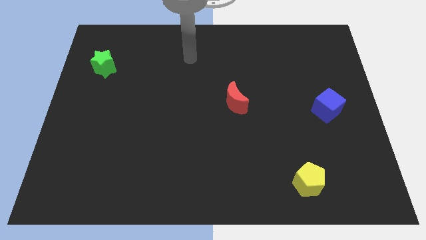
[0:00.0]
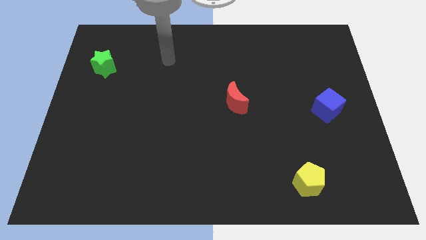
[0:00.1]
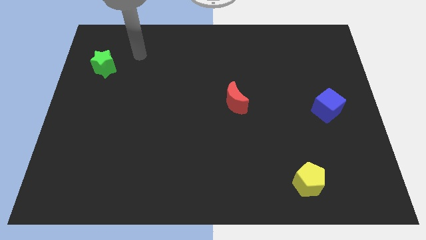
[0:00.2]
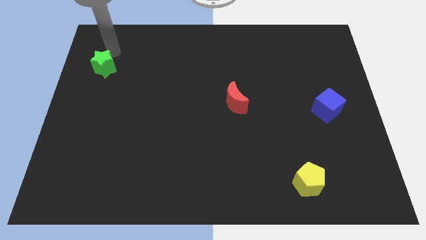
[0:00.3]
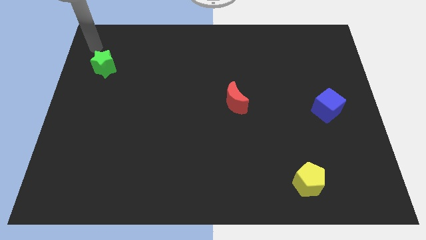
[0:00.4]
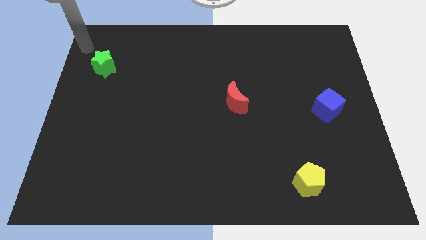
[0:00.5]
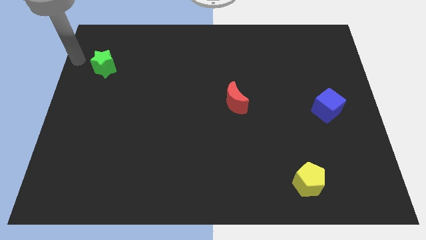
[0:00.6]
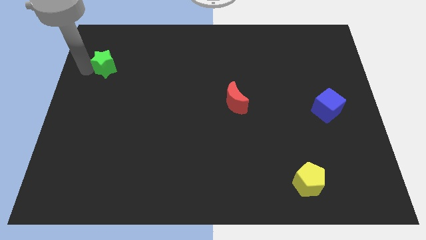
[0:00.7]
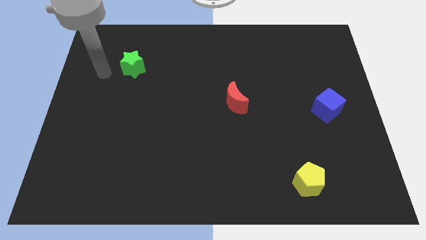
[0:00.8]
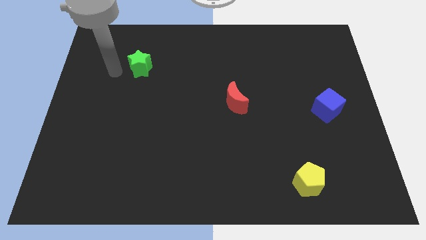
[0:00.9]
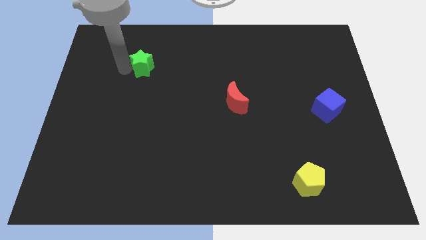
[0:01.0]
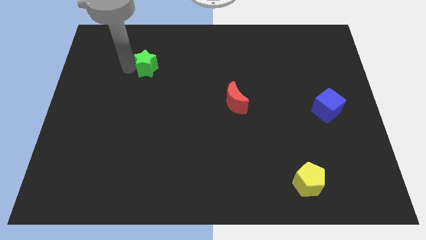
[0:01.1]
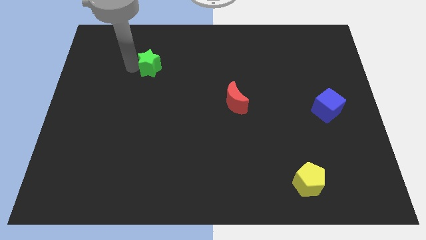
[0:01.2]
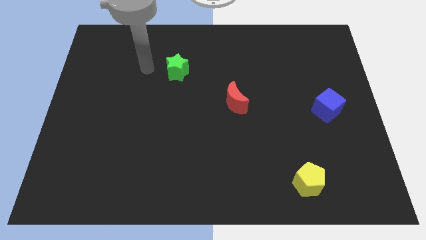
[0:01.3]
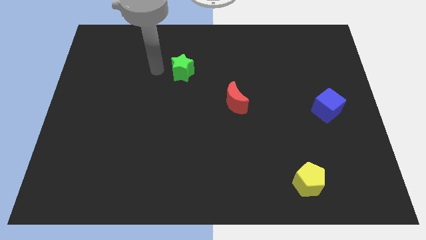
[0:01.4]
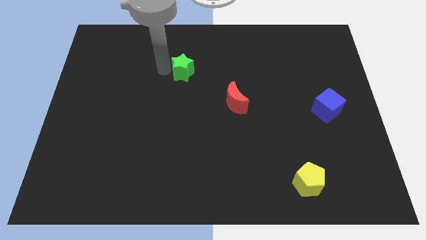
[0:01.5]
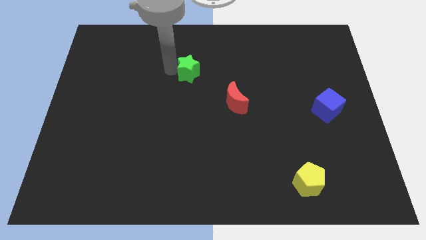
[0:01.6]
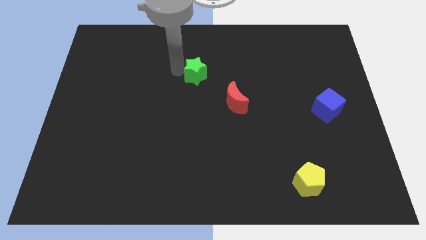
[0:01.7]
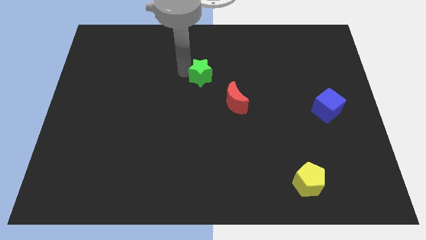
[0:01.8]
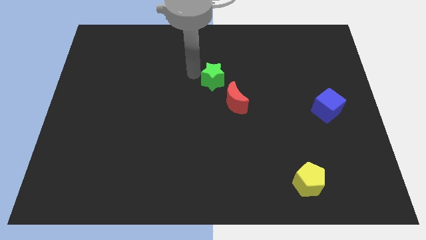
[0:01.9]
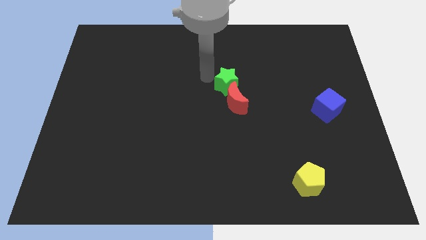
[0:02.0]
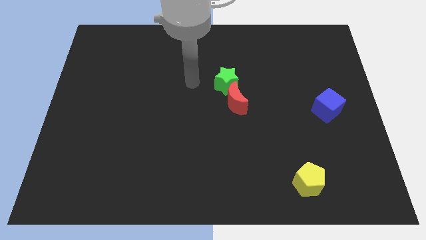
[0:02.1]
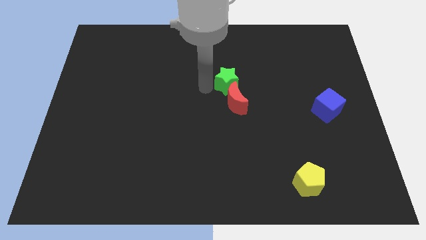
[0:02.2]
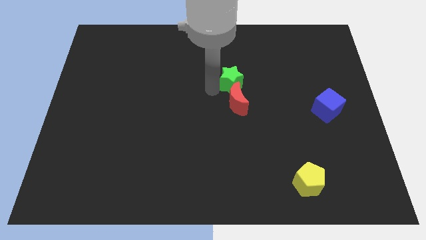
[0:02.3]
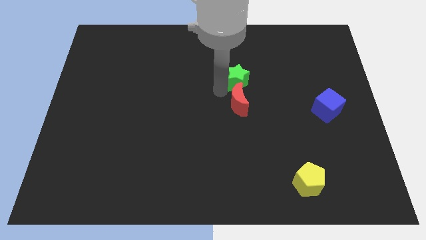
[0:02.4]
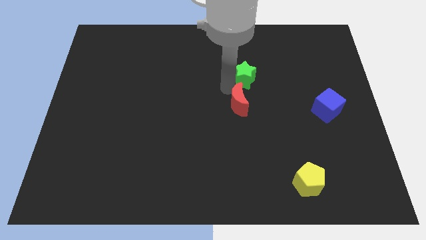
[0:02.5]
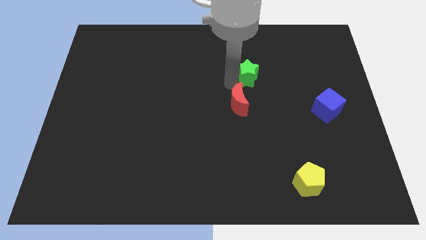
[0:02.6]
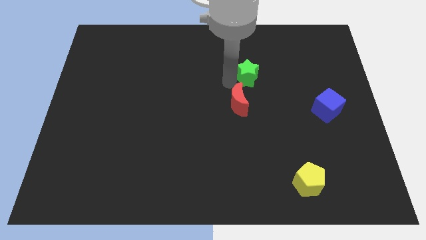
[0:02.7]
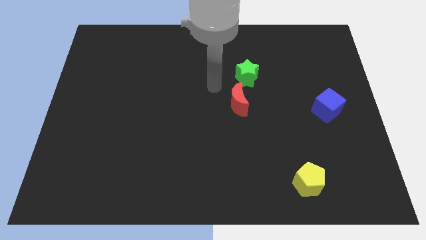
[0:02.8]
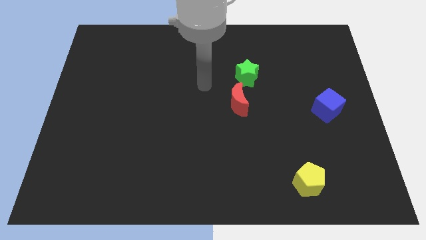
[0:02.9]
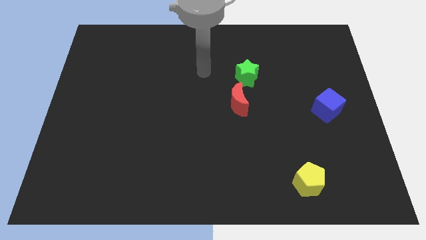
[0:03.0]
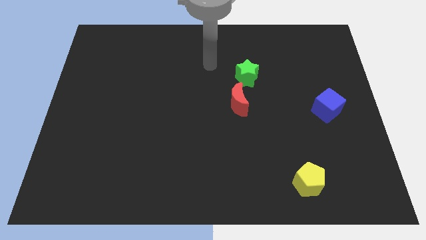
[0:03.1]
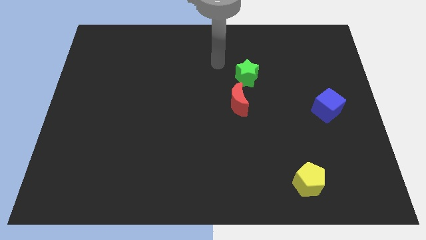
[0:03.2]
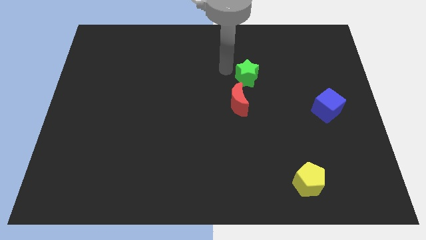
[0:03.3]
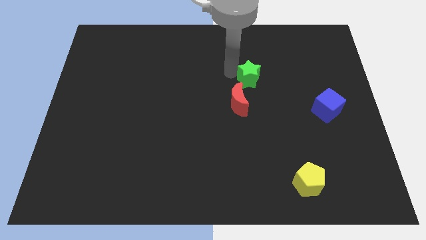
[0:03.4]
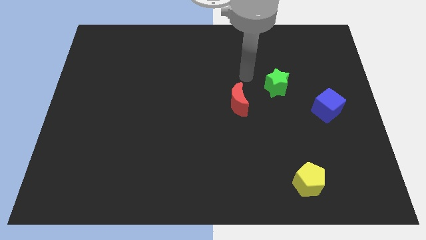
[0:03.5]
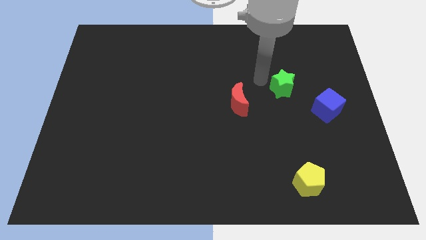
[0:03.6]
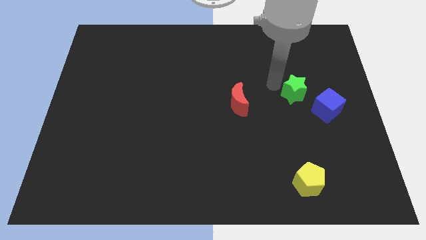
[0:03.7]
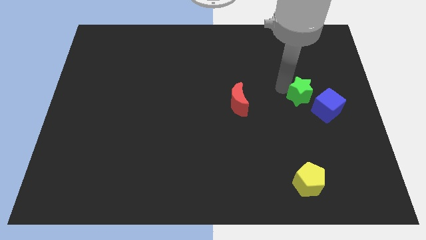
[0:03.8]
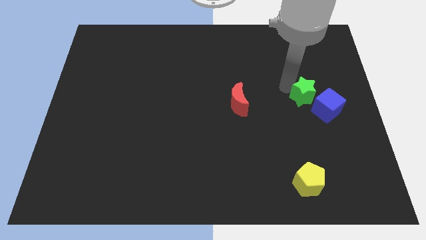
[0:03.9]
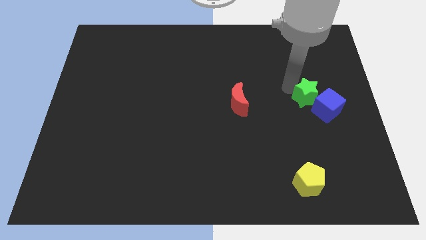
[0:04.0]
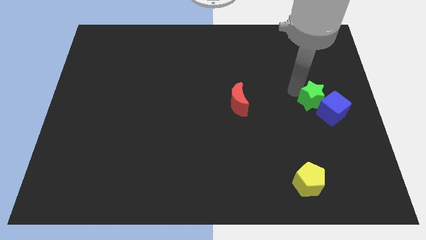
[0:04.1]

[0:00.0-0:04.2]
put the green block to the blue cube

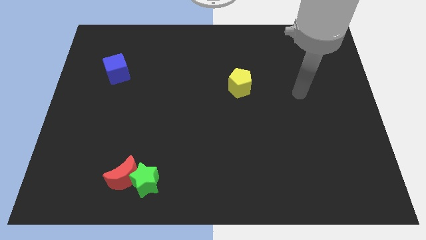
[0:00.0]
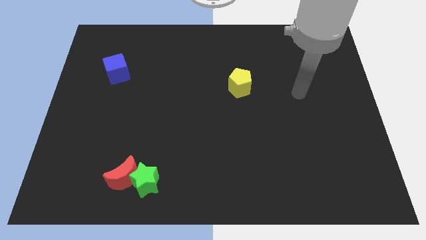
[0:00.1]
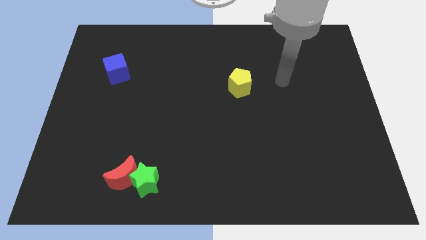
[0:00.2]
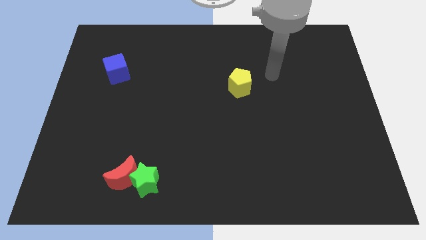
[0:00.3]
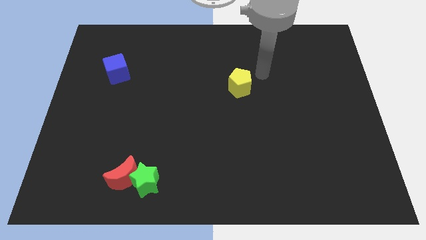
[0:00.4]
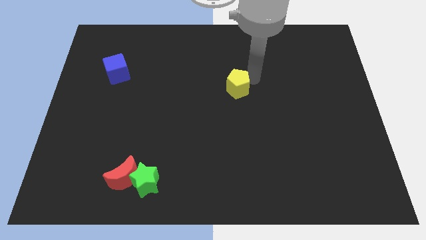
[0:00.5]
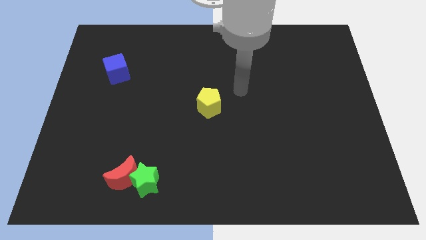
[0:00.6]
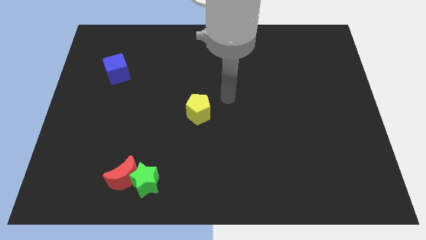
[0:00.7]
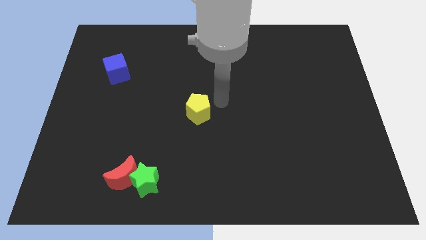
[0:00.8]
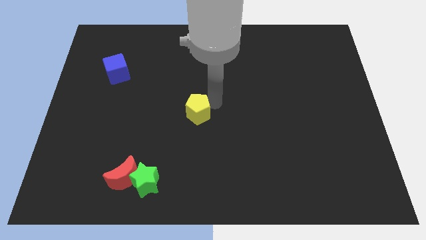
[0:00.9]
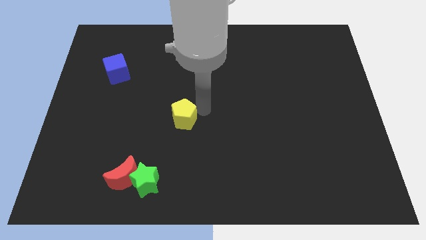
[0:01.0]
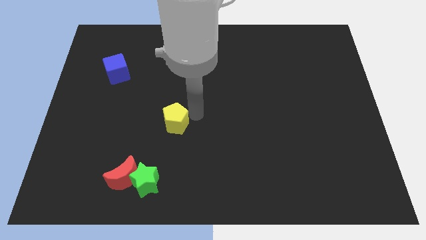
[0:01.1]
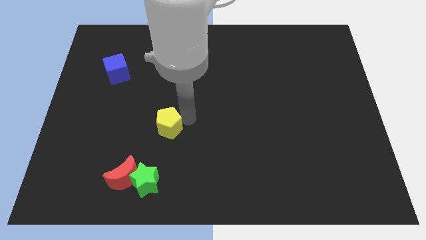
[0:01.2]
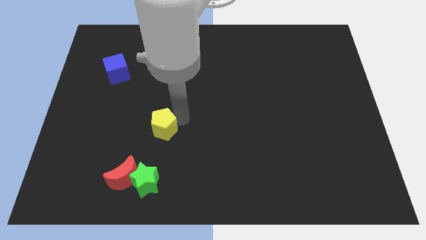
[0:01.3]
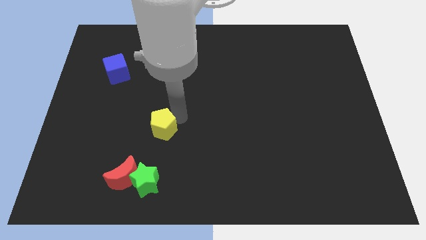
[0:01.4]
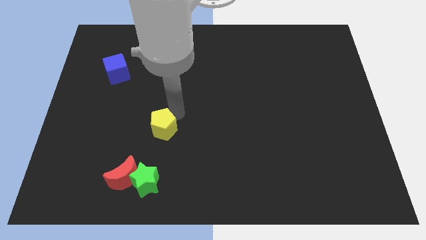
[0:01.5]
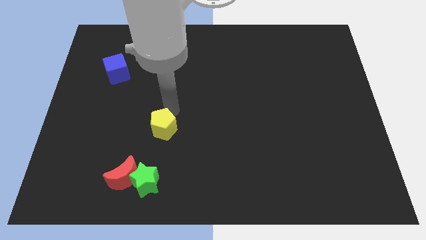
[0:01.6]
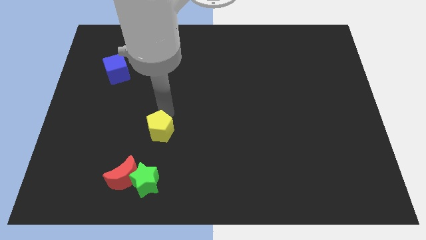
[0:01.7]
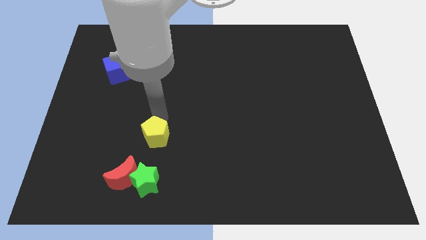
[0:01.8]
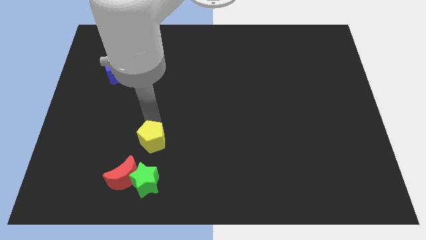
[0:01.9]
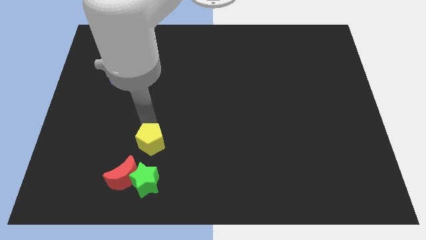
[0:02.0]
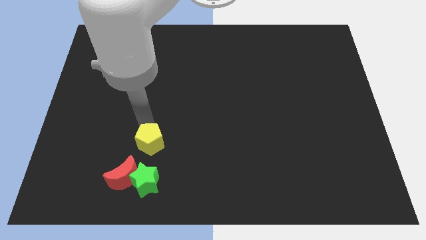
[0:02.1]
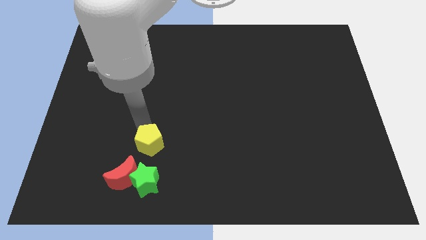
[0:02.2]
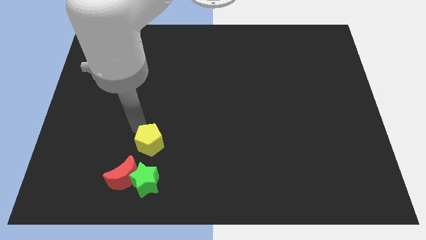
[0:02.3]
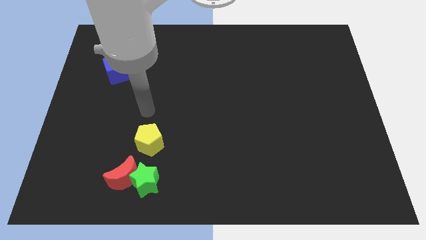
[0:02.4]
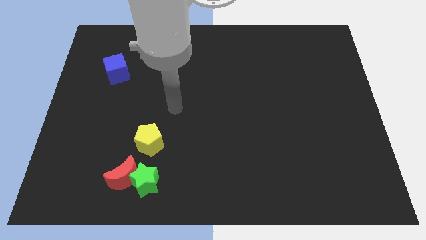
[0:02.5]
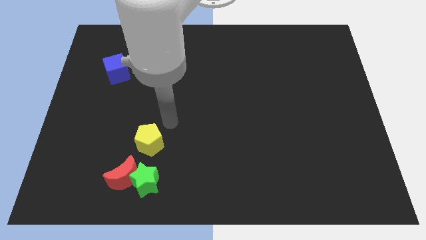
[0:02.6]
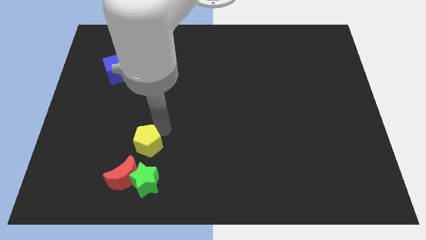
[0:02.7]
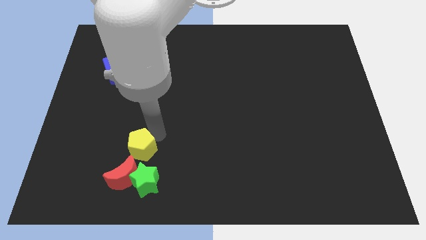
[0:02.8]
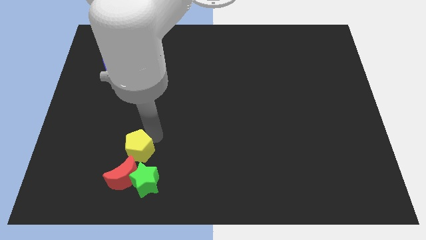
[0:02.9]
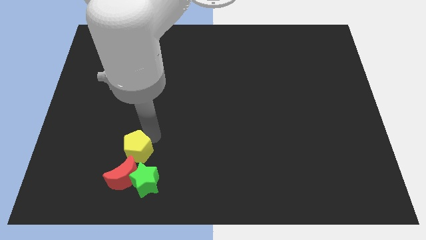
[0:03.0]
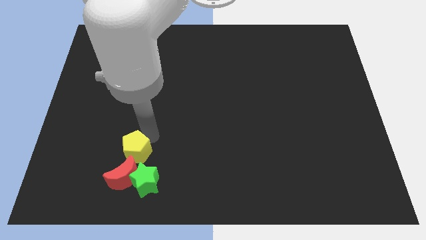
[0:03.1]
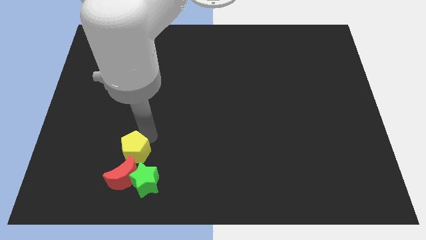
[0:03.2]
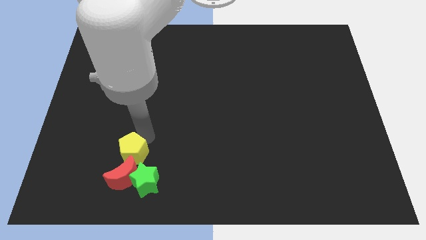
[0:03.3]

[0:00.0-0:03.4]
put the pentagon close to the red block

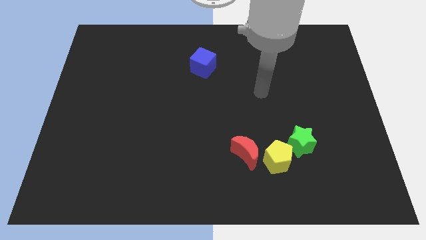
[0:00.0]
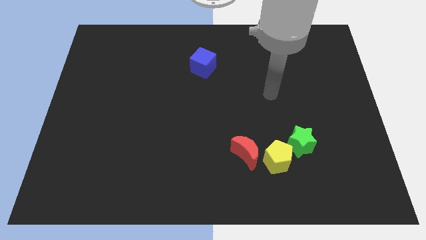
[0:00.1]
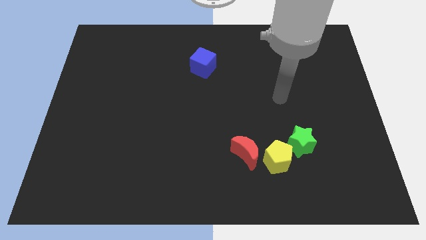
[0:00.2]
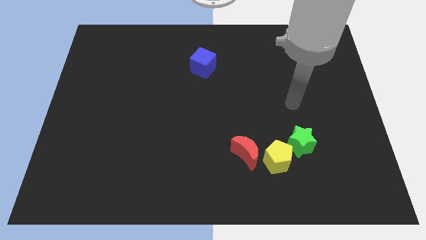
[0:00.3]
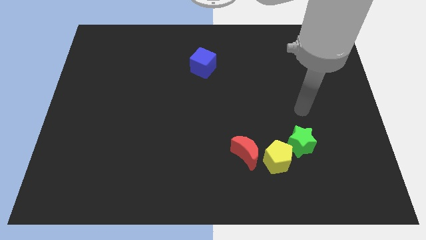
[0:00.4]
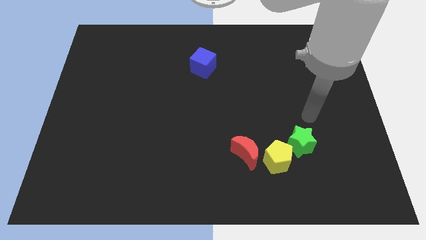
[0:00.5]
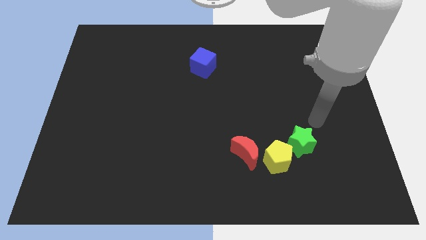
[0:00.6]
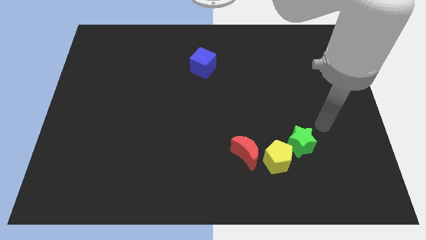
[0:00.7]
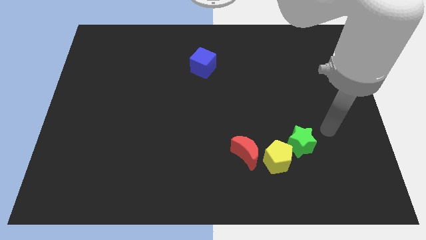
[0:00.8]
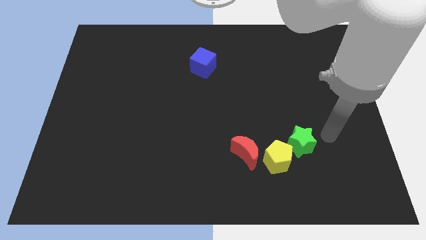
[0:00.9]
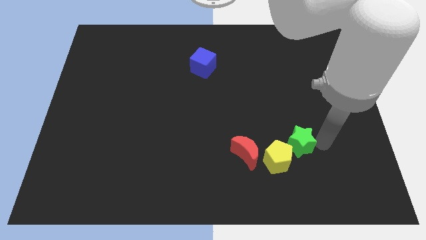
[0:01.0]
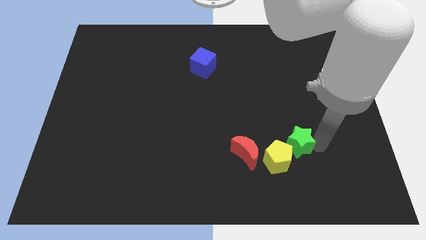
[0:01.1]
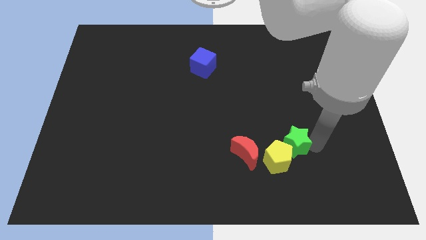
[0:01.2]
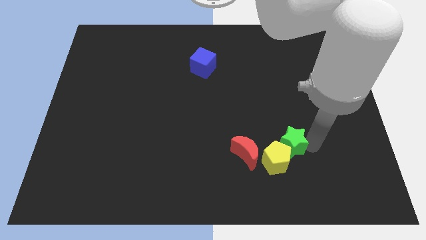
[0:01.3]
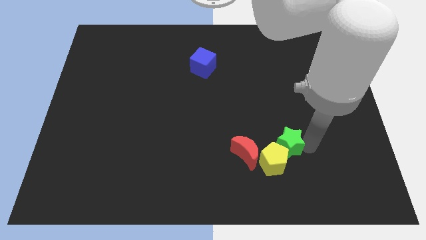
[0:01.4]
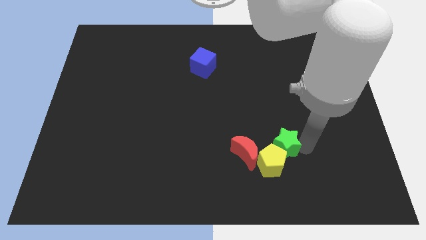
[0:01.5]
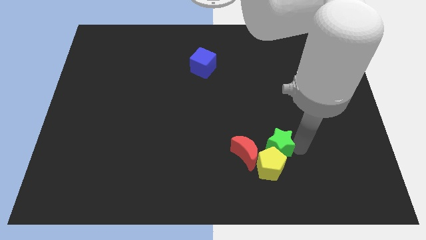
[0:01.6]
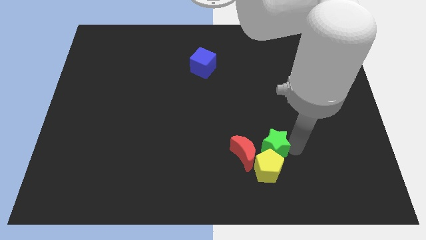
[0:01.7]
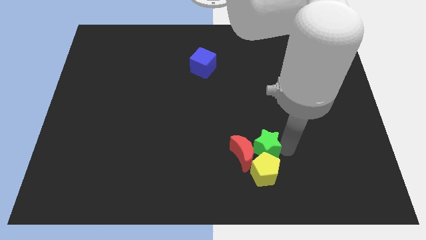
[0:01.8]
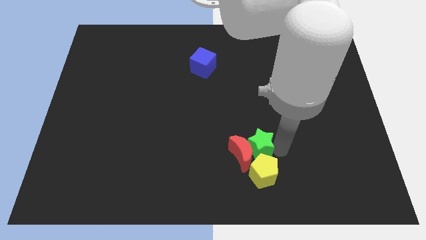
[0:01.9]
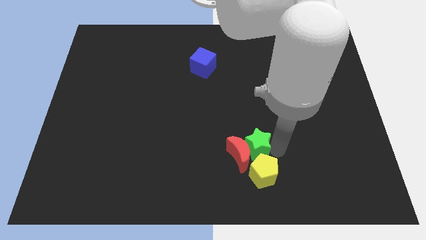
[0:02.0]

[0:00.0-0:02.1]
put the star close to the red moon
